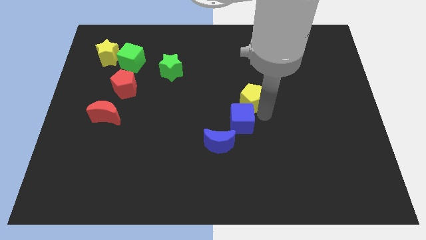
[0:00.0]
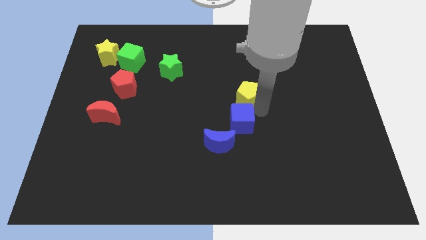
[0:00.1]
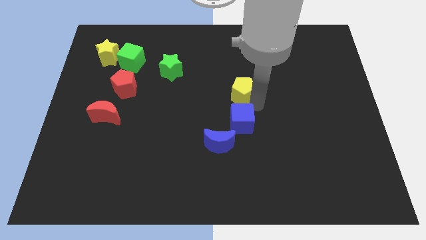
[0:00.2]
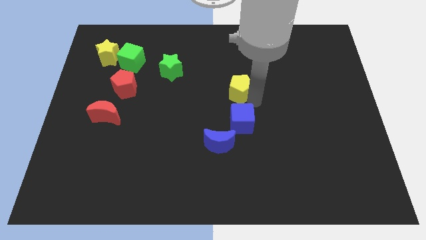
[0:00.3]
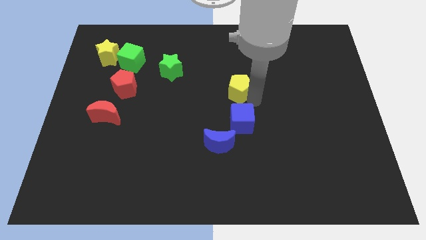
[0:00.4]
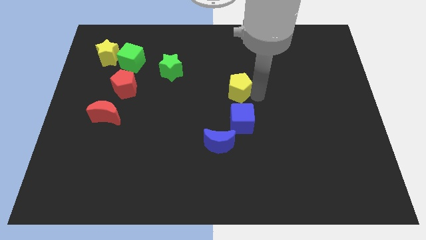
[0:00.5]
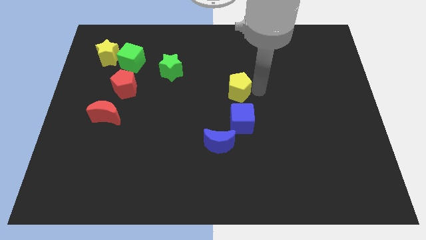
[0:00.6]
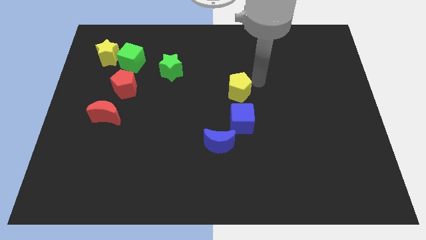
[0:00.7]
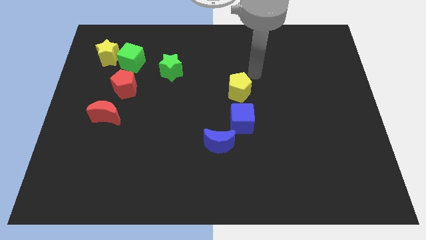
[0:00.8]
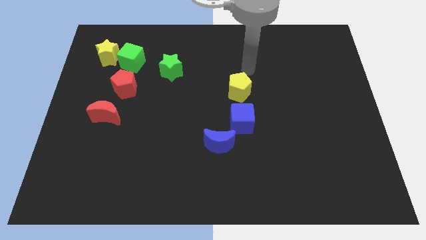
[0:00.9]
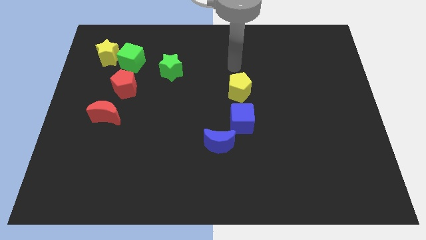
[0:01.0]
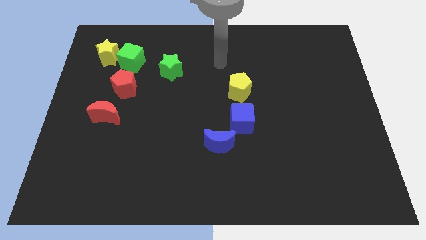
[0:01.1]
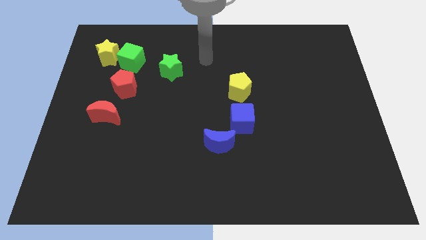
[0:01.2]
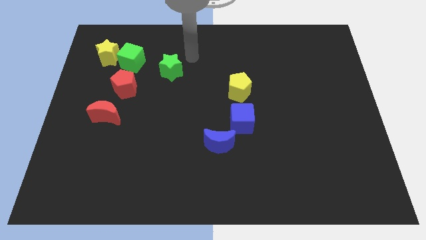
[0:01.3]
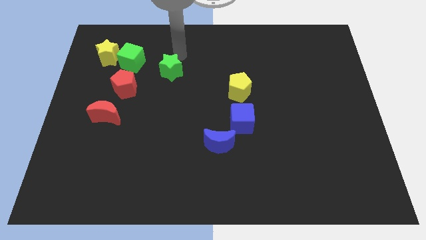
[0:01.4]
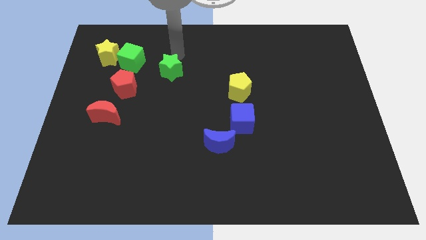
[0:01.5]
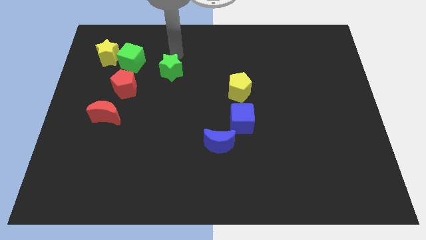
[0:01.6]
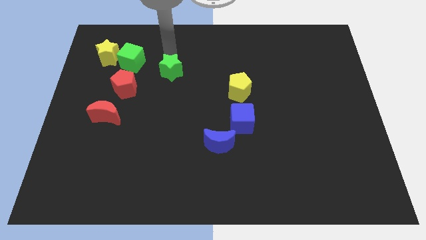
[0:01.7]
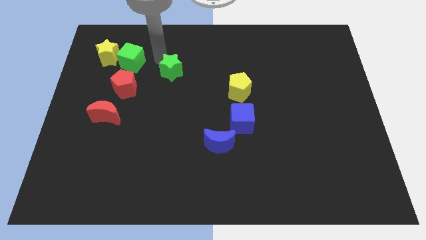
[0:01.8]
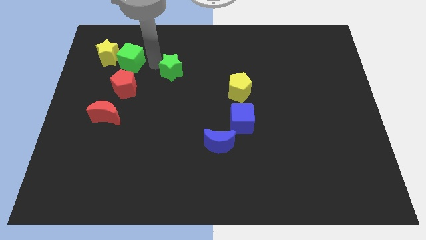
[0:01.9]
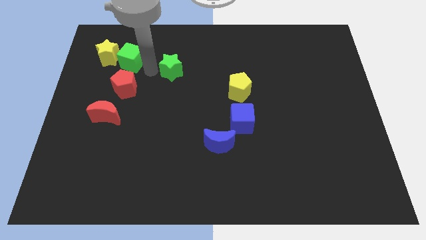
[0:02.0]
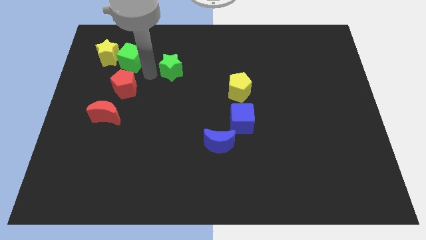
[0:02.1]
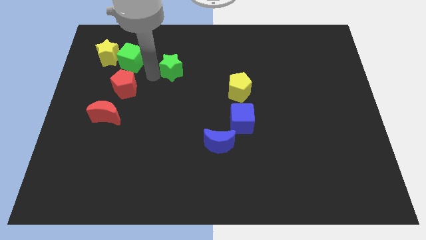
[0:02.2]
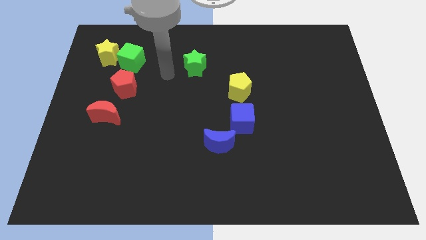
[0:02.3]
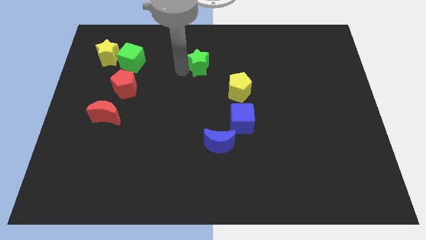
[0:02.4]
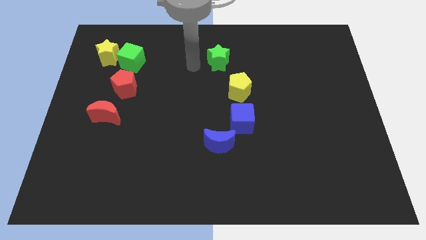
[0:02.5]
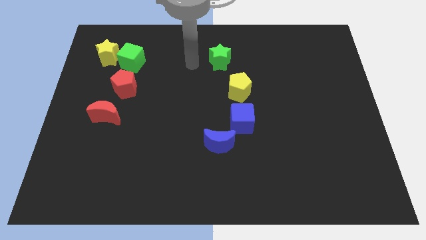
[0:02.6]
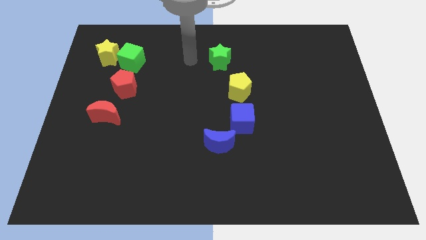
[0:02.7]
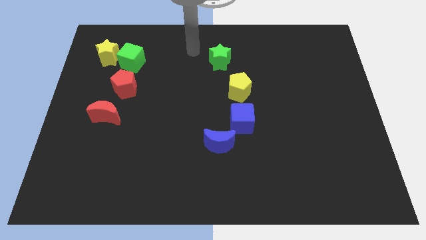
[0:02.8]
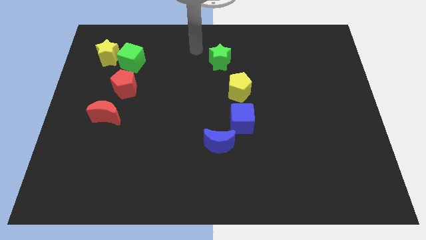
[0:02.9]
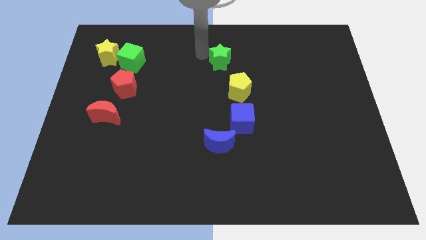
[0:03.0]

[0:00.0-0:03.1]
slide green star vertical to the blue moon

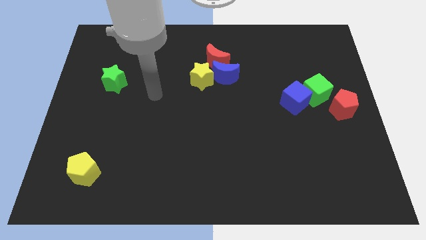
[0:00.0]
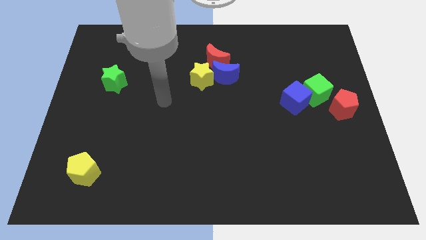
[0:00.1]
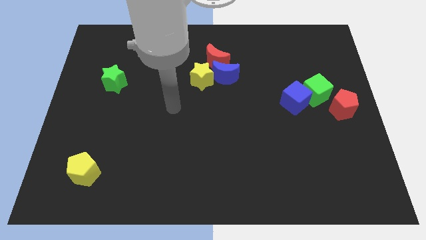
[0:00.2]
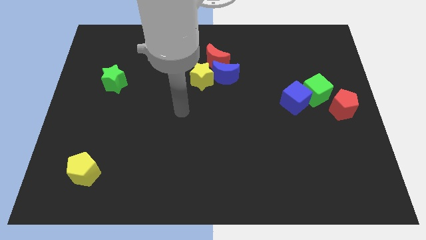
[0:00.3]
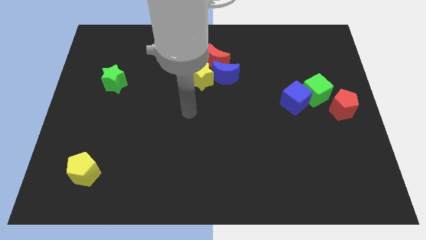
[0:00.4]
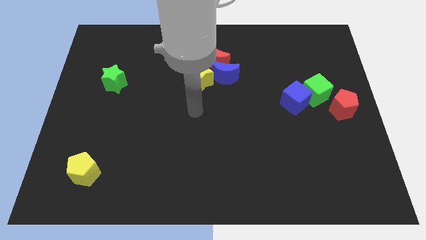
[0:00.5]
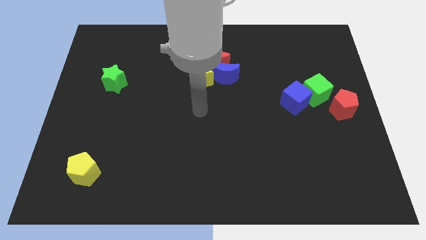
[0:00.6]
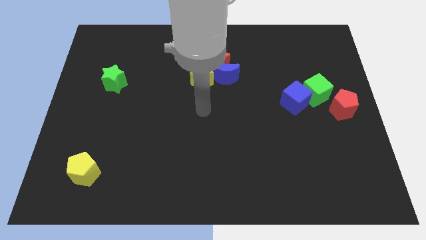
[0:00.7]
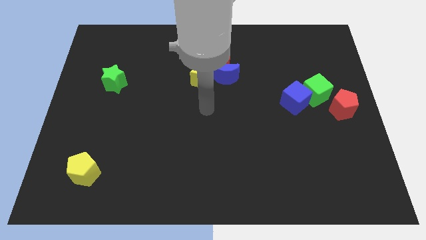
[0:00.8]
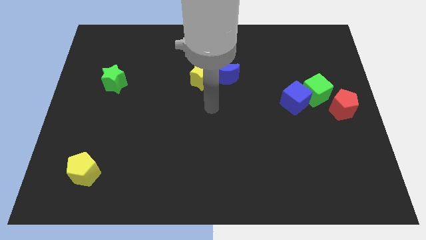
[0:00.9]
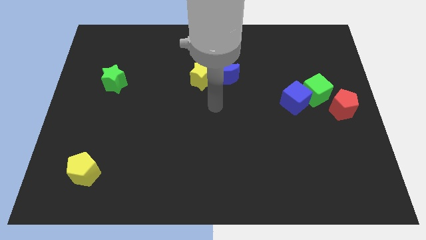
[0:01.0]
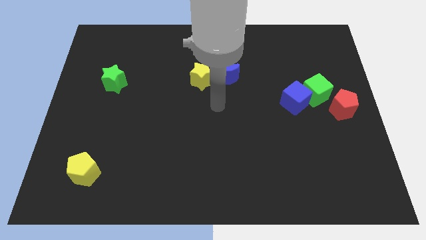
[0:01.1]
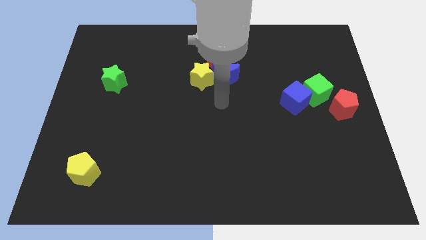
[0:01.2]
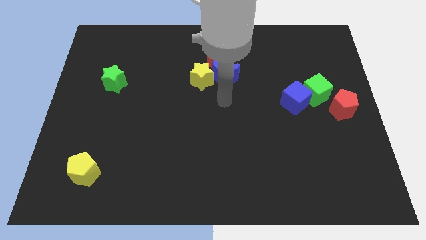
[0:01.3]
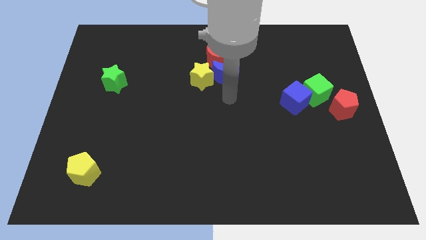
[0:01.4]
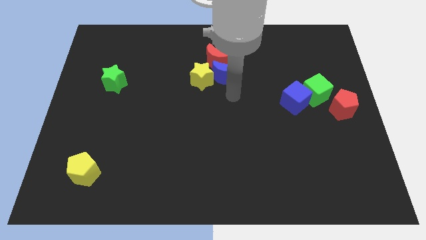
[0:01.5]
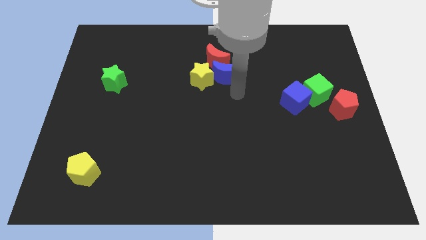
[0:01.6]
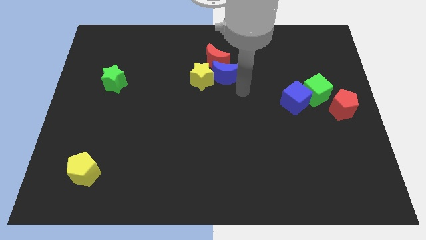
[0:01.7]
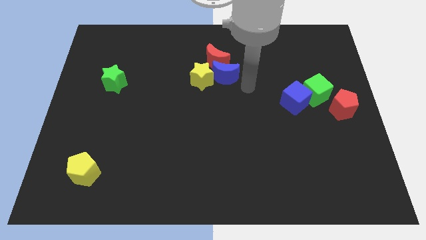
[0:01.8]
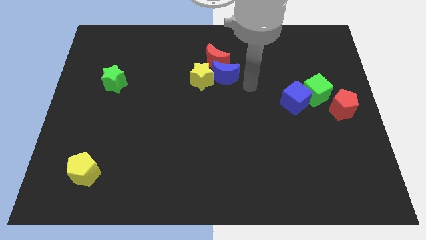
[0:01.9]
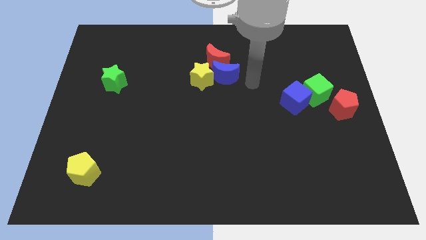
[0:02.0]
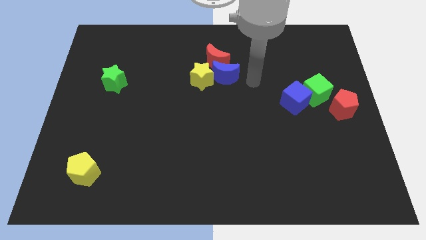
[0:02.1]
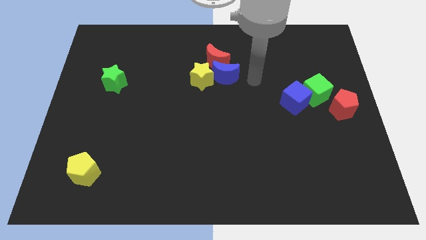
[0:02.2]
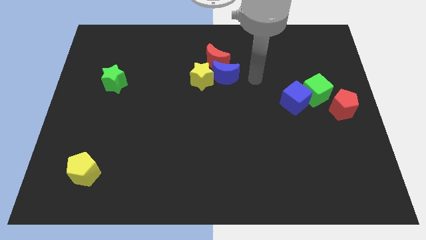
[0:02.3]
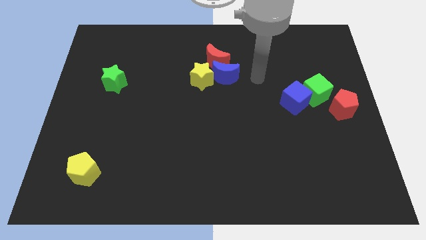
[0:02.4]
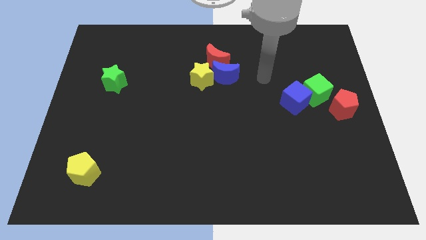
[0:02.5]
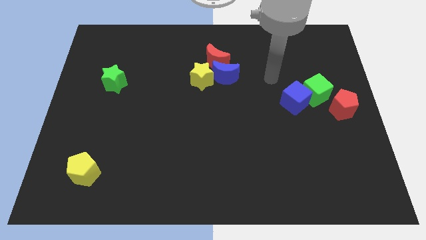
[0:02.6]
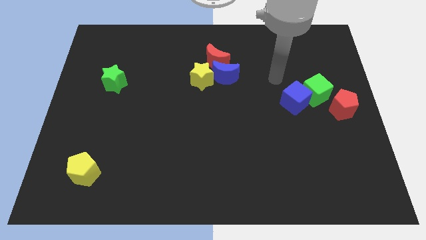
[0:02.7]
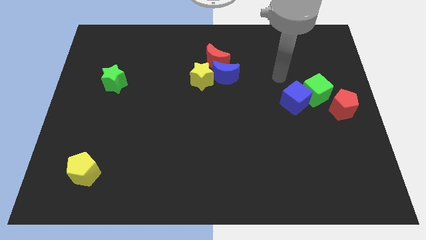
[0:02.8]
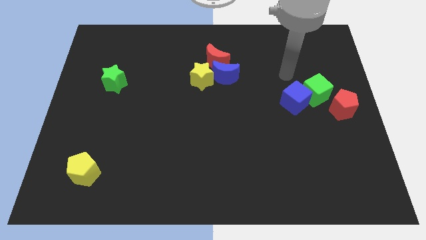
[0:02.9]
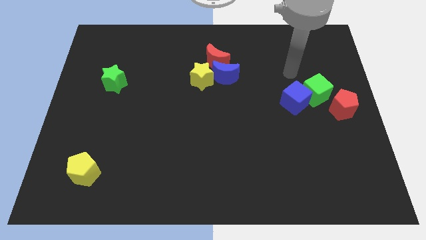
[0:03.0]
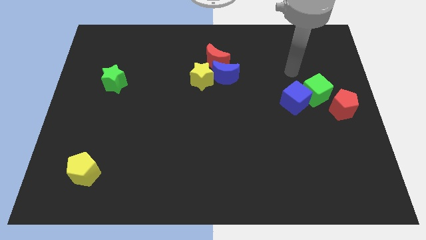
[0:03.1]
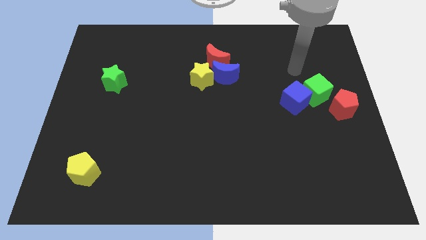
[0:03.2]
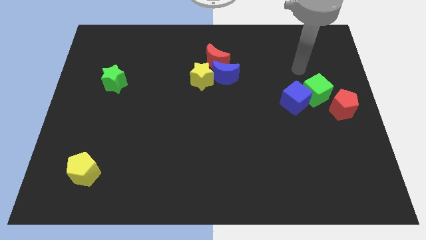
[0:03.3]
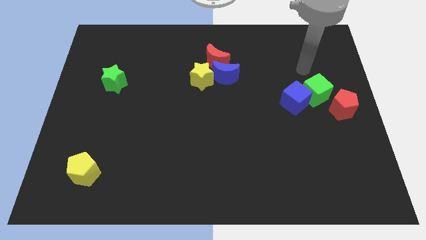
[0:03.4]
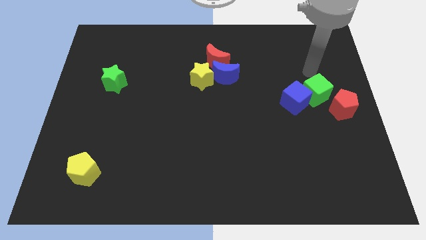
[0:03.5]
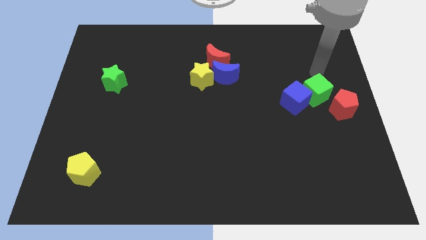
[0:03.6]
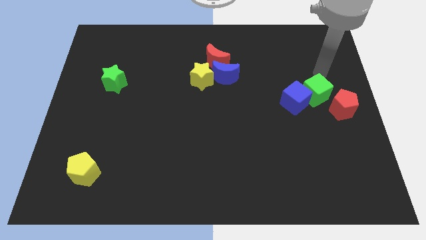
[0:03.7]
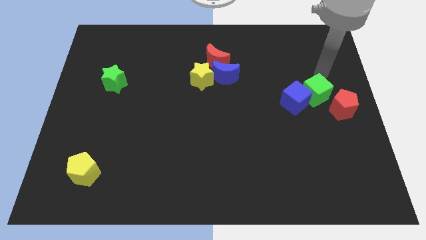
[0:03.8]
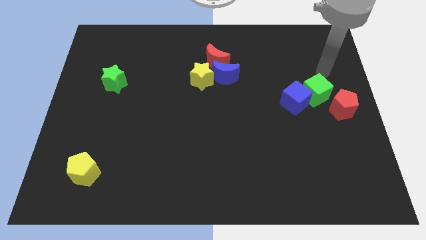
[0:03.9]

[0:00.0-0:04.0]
put your arm vertically above the green cube

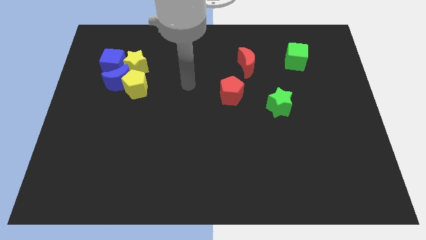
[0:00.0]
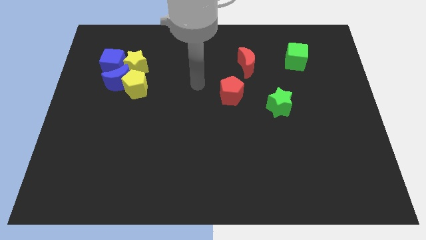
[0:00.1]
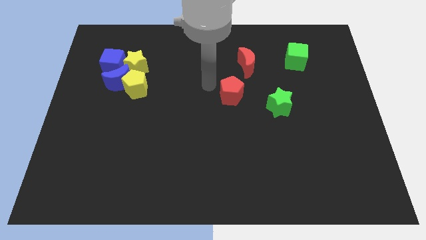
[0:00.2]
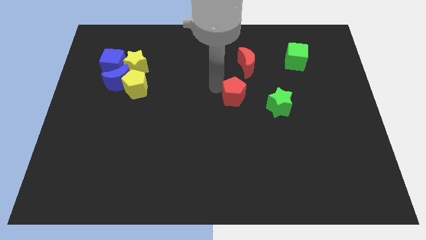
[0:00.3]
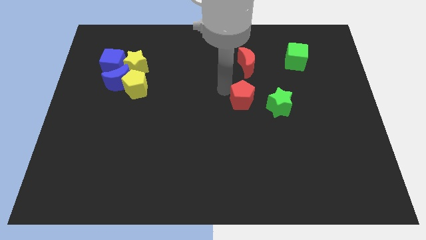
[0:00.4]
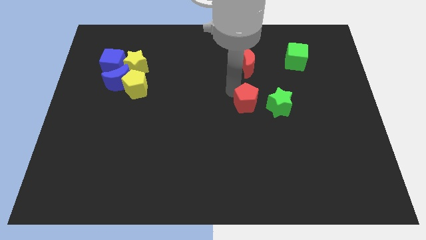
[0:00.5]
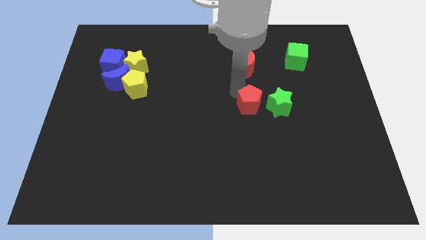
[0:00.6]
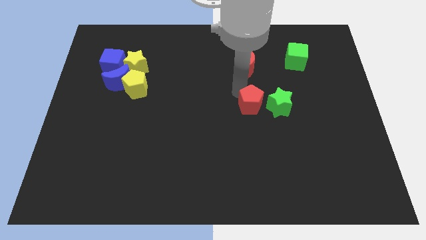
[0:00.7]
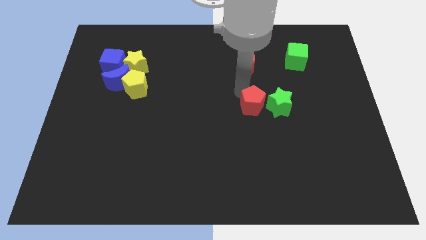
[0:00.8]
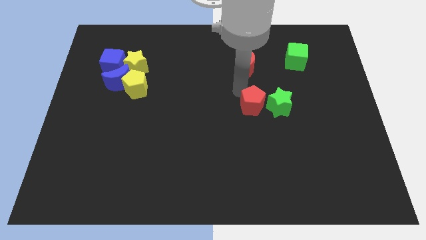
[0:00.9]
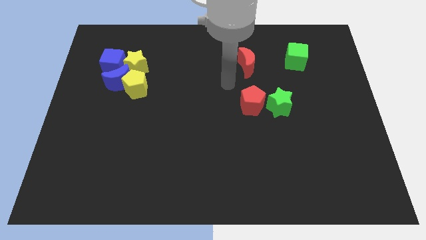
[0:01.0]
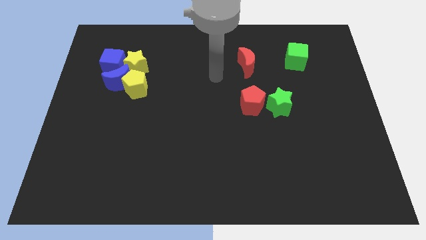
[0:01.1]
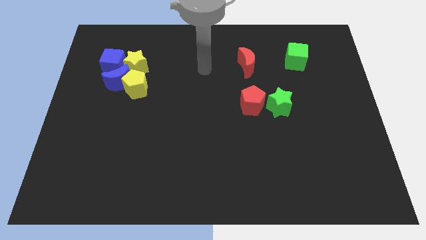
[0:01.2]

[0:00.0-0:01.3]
place the red pentagon to the left side of green star

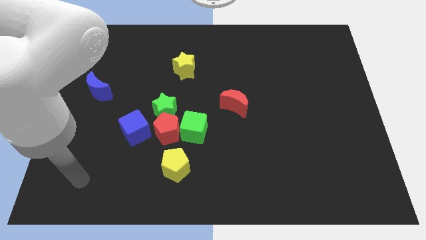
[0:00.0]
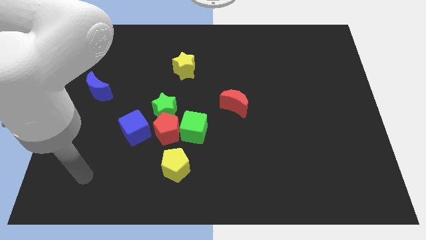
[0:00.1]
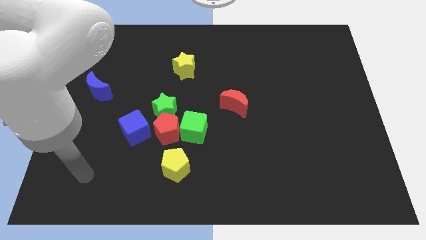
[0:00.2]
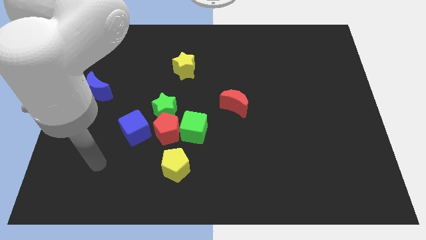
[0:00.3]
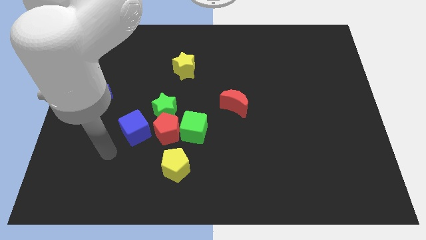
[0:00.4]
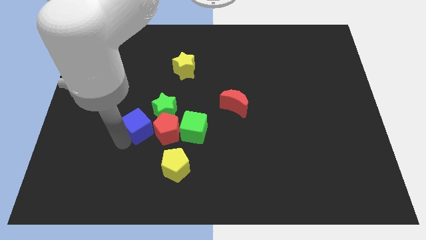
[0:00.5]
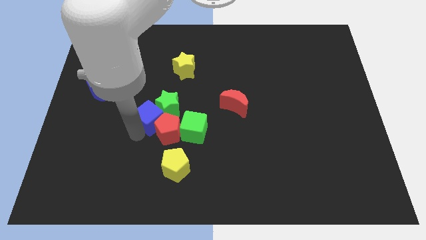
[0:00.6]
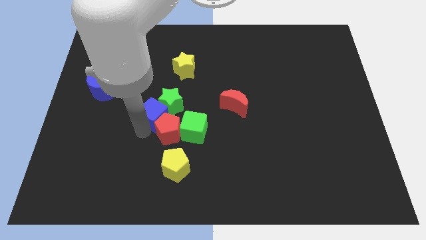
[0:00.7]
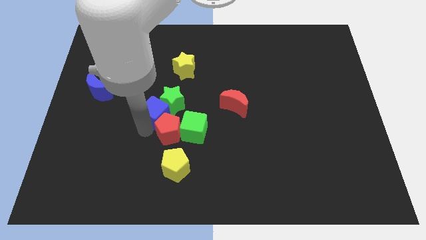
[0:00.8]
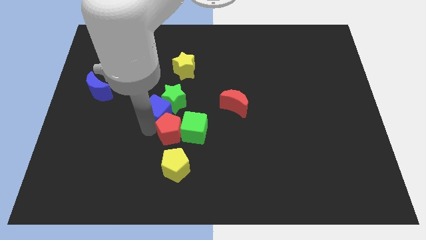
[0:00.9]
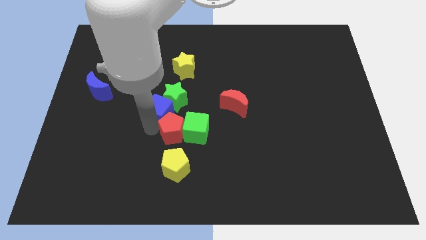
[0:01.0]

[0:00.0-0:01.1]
push the blue cube into the green star
